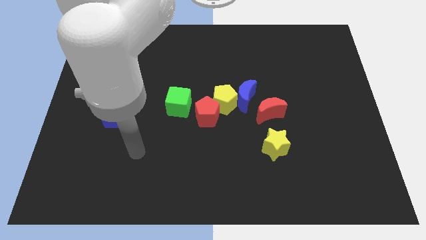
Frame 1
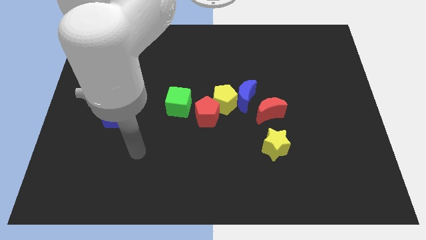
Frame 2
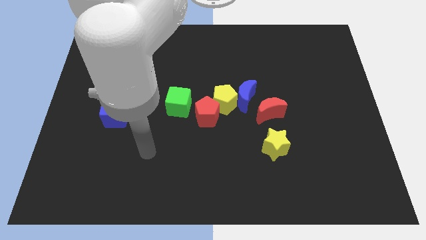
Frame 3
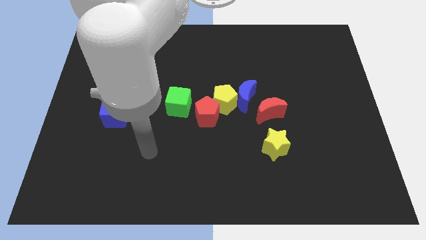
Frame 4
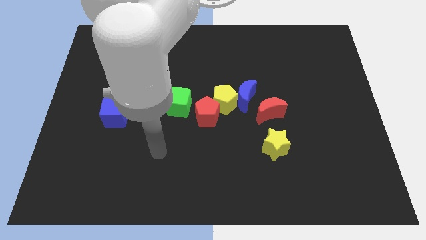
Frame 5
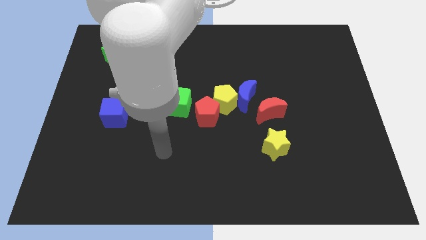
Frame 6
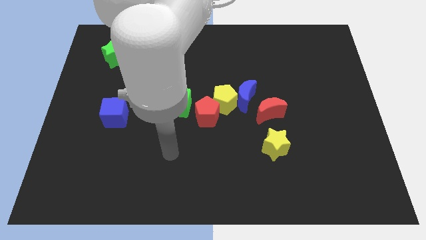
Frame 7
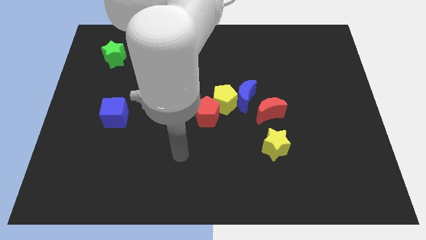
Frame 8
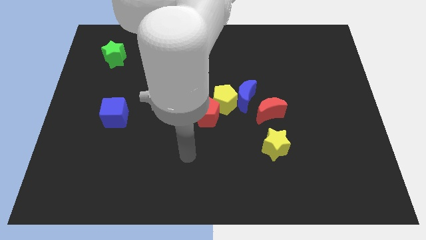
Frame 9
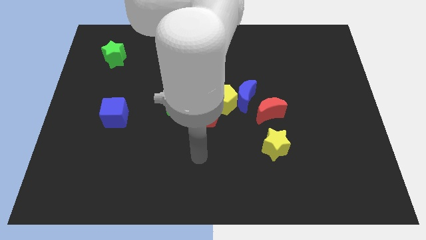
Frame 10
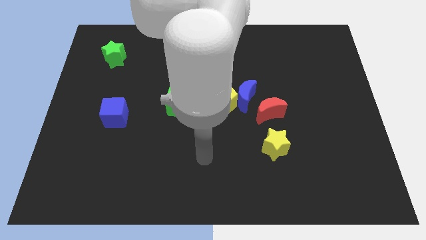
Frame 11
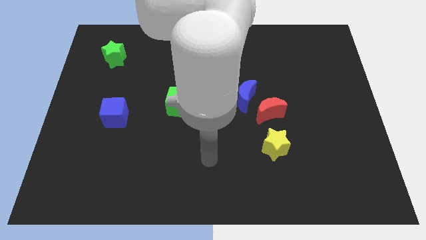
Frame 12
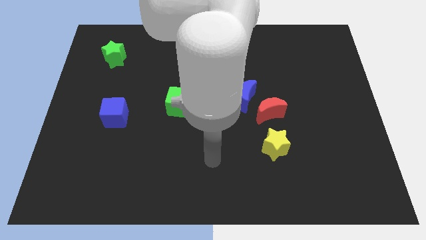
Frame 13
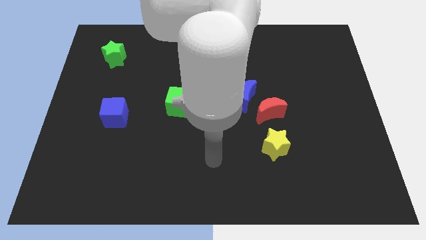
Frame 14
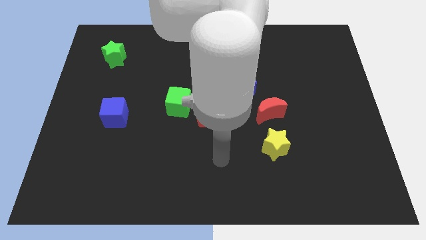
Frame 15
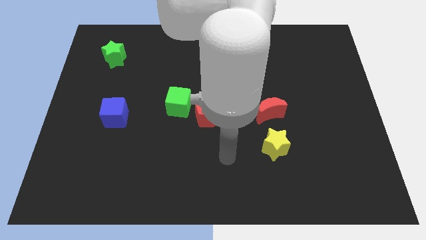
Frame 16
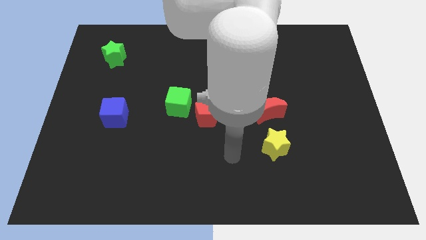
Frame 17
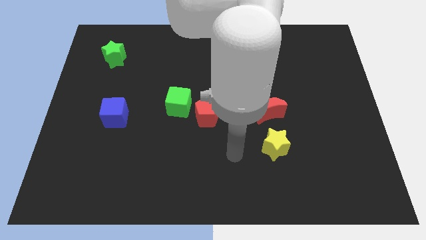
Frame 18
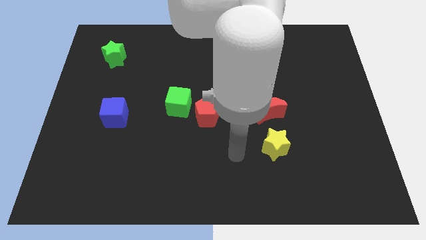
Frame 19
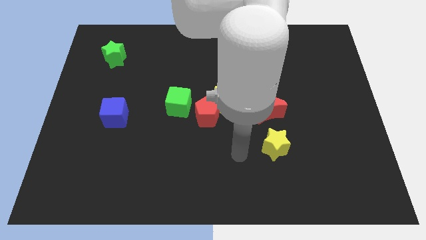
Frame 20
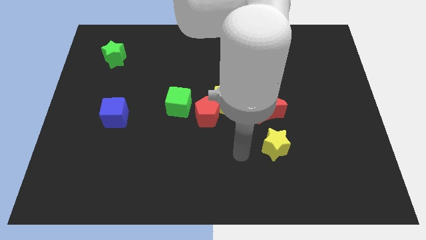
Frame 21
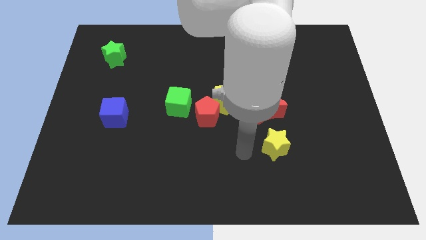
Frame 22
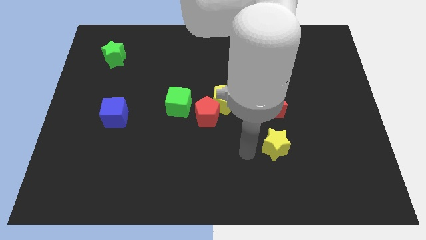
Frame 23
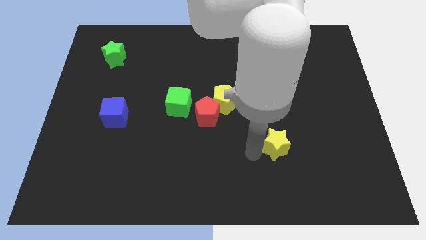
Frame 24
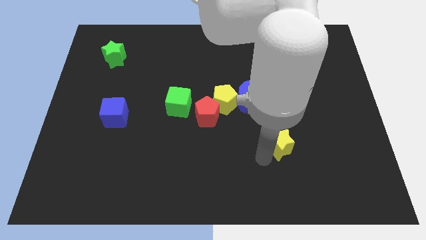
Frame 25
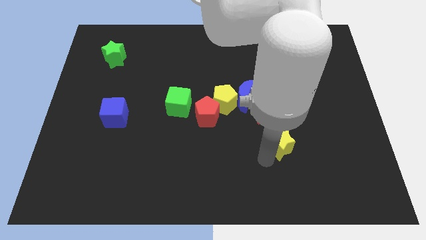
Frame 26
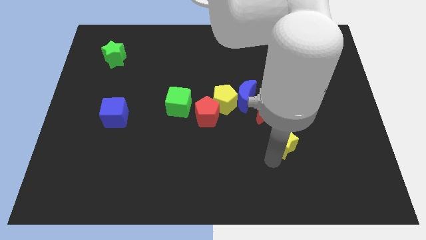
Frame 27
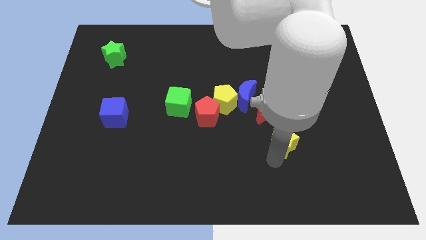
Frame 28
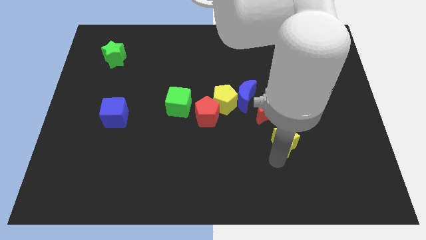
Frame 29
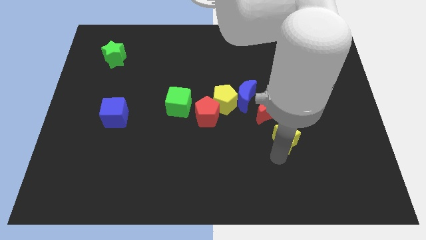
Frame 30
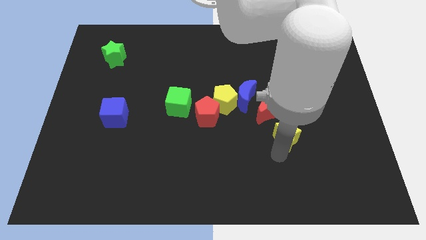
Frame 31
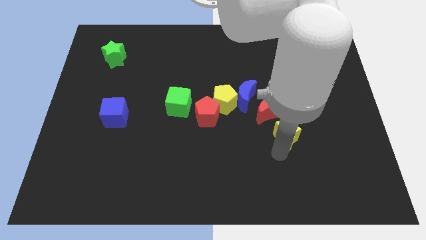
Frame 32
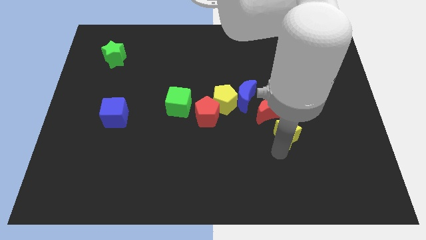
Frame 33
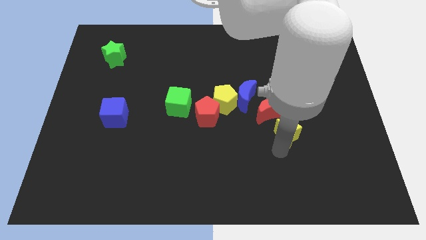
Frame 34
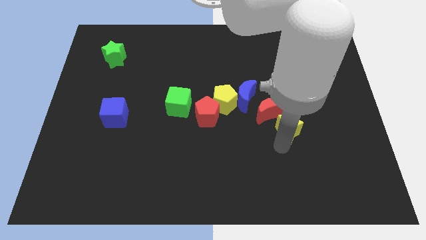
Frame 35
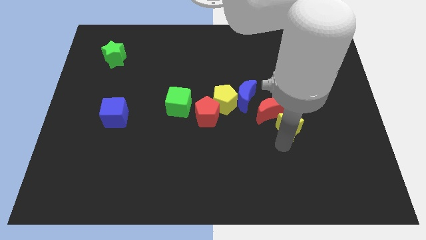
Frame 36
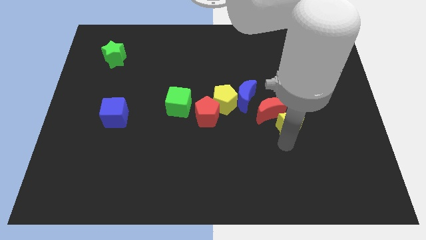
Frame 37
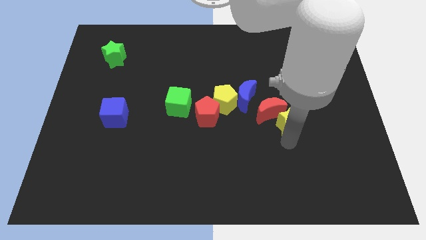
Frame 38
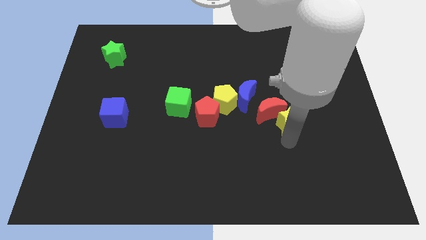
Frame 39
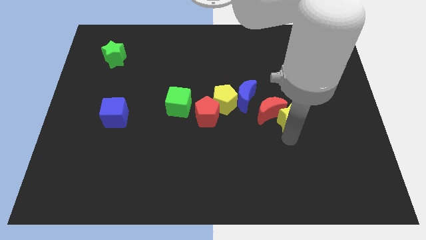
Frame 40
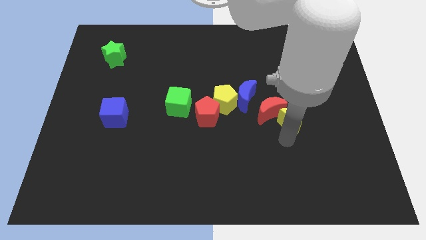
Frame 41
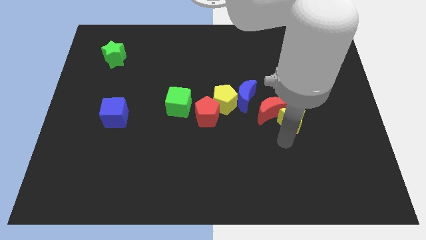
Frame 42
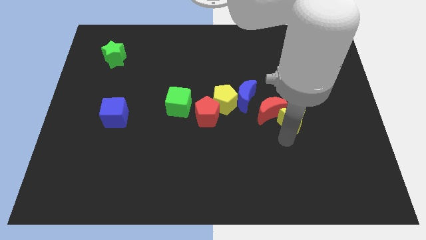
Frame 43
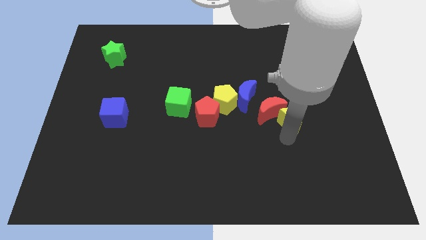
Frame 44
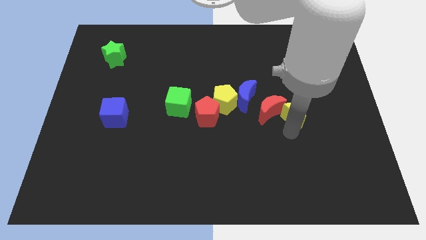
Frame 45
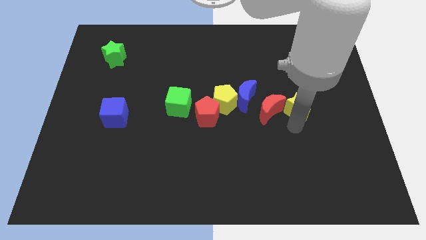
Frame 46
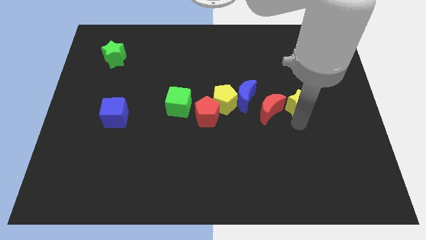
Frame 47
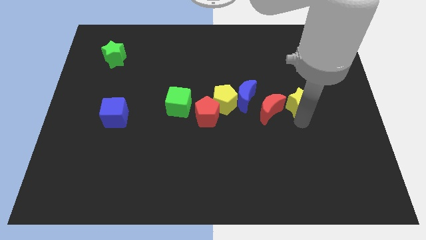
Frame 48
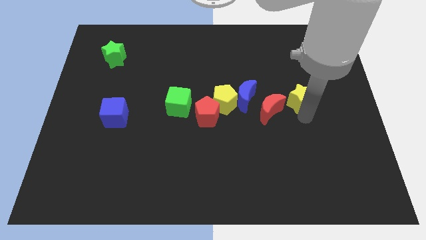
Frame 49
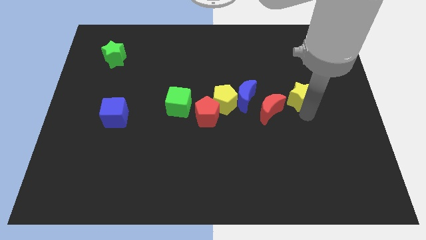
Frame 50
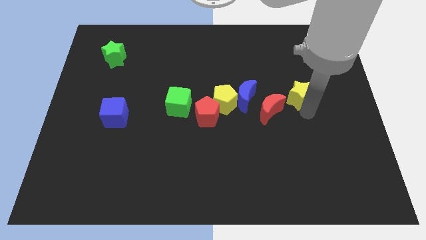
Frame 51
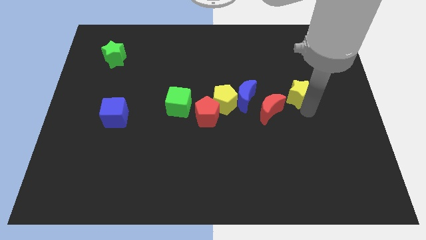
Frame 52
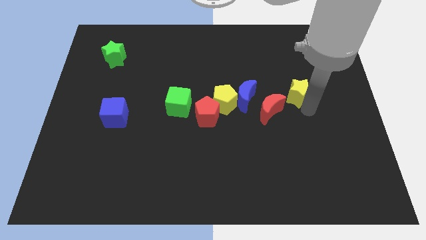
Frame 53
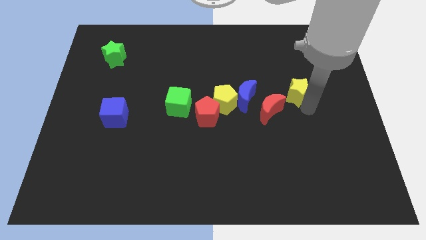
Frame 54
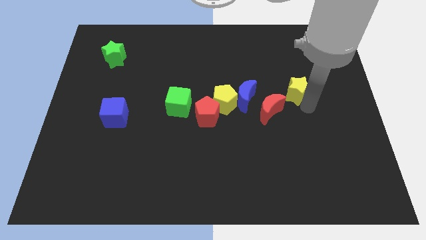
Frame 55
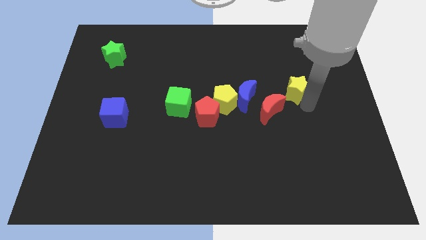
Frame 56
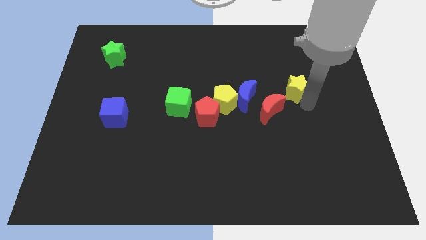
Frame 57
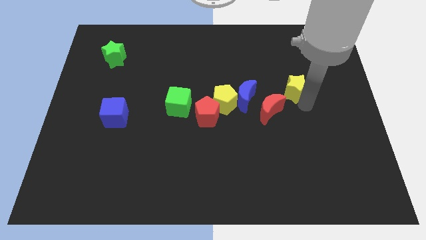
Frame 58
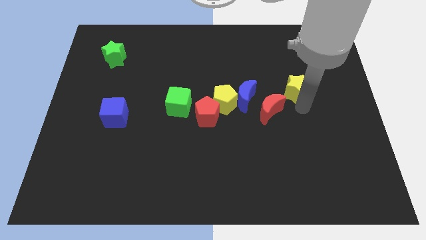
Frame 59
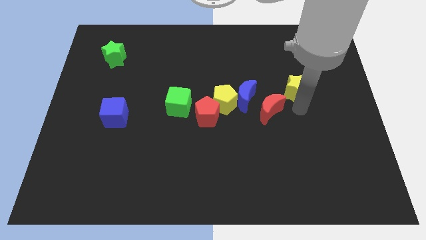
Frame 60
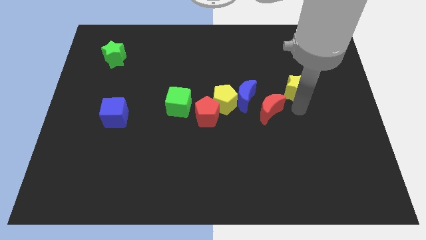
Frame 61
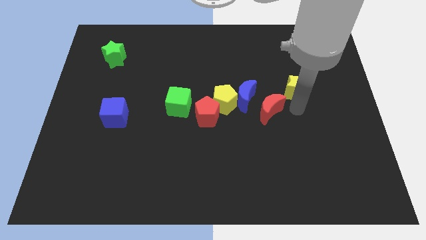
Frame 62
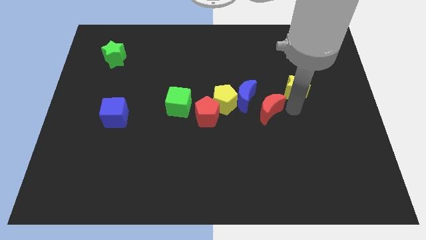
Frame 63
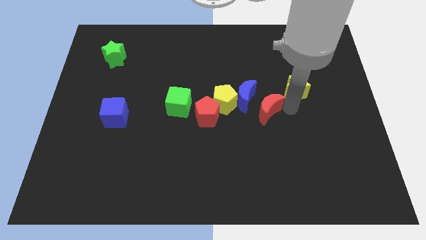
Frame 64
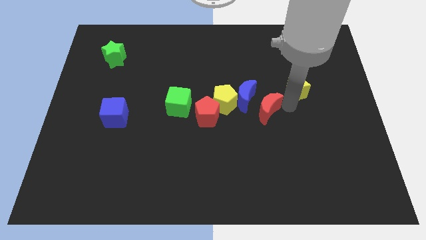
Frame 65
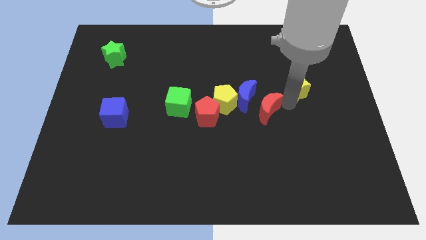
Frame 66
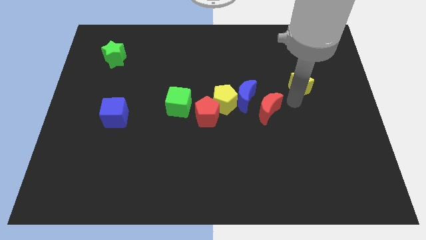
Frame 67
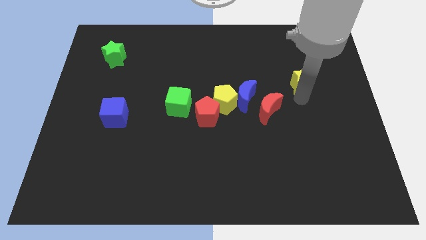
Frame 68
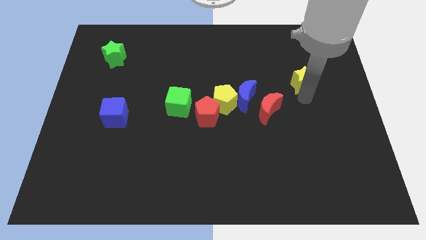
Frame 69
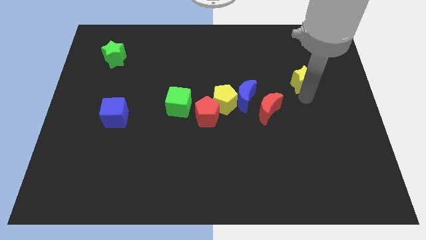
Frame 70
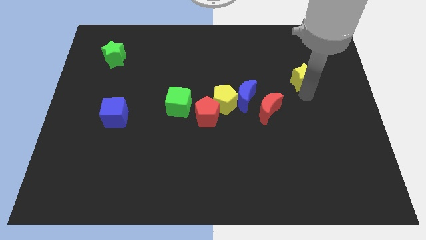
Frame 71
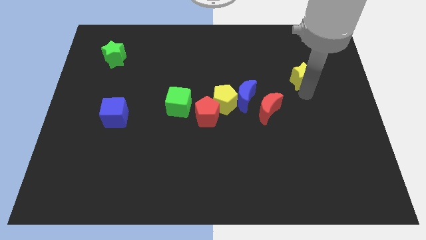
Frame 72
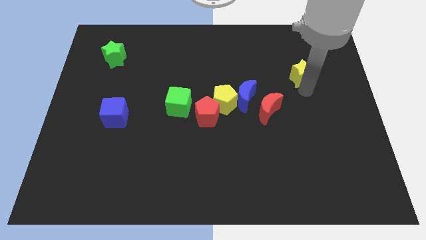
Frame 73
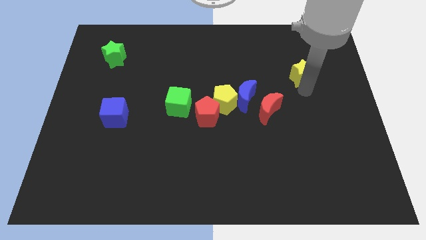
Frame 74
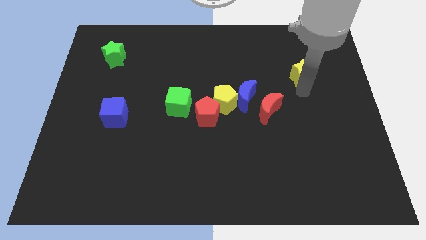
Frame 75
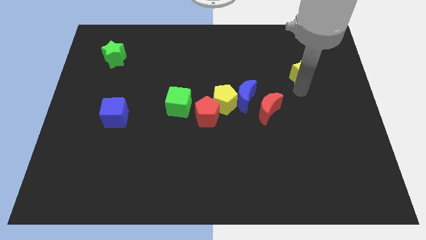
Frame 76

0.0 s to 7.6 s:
move yellow star towards the top

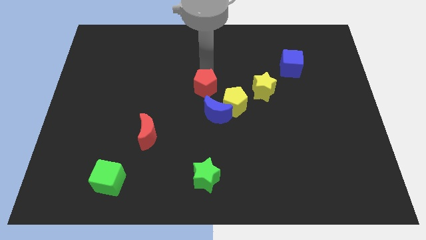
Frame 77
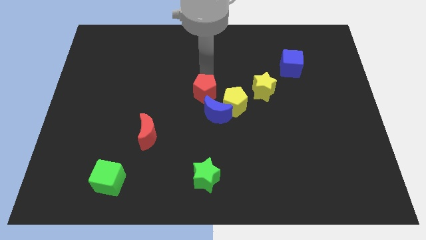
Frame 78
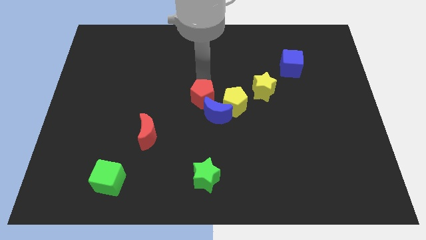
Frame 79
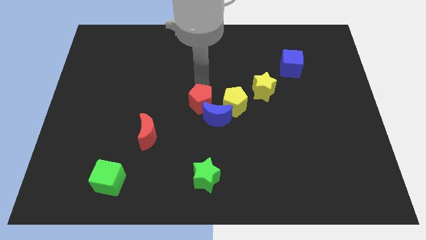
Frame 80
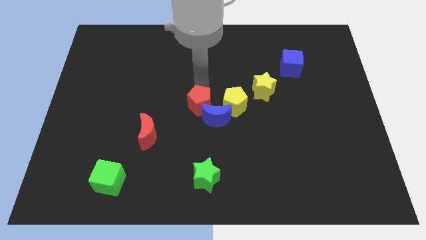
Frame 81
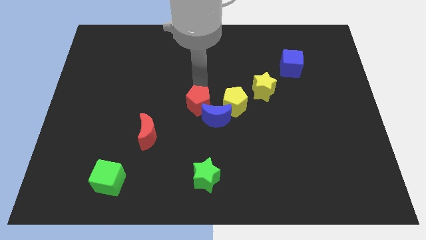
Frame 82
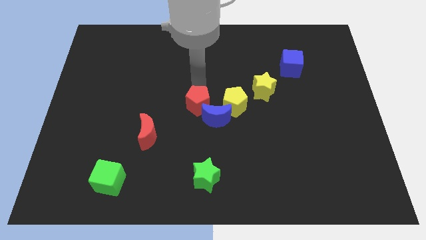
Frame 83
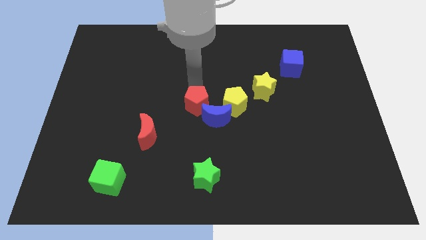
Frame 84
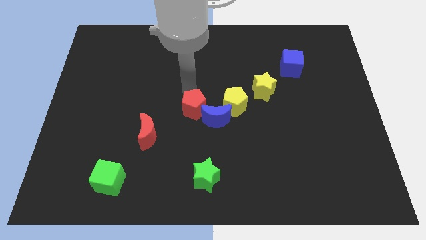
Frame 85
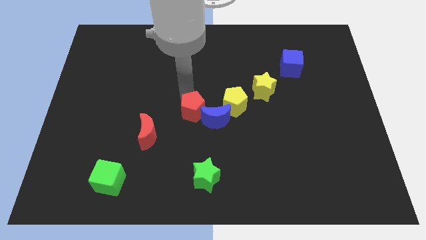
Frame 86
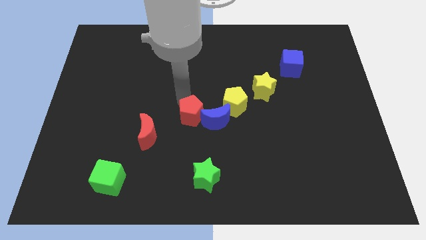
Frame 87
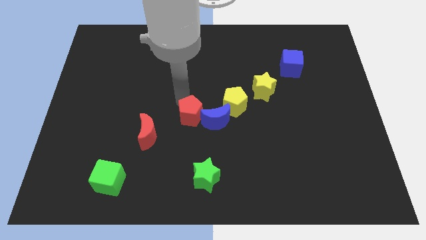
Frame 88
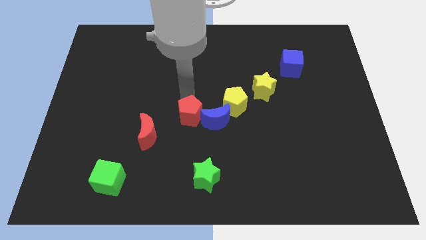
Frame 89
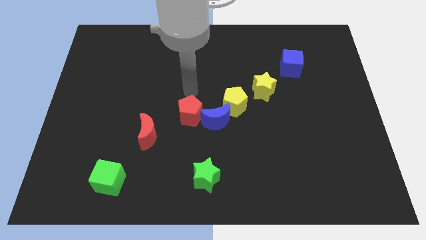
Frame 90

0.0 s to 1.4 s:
push red pentagon in blue moon

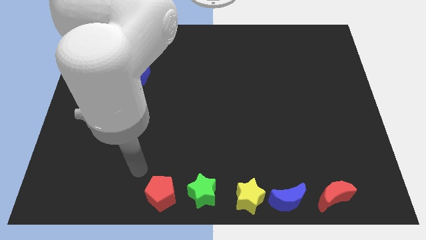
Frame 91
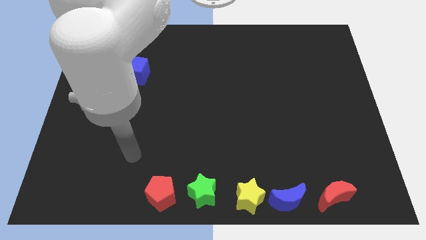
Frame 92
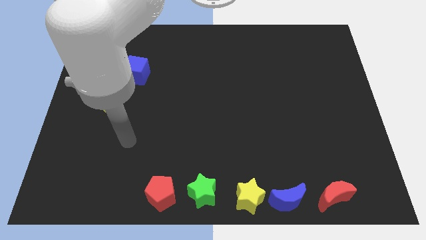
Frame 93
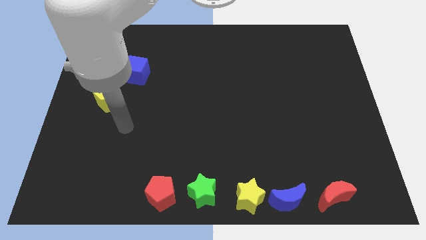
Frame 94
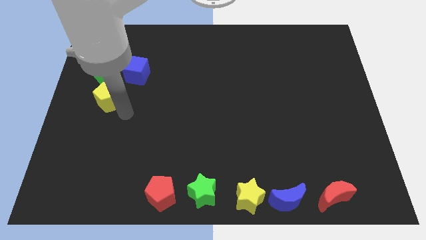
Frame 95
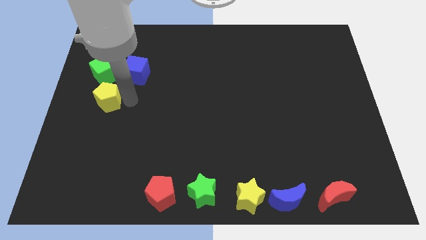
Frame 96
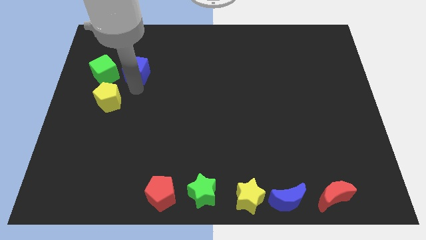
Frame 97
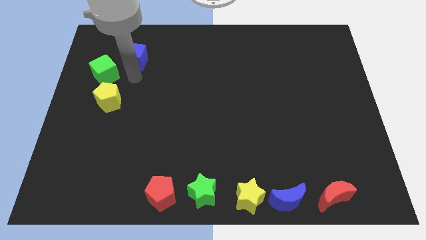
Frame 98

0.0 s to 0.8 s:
slightly push the blue cube to top side of the board
